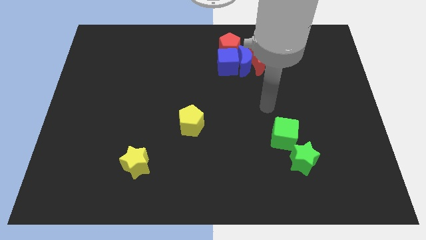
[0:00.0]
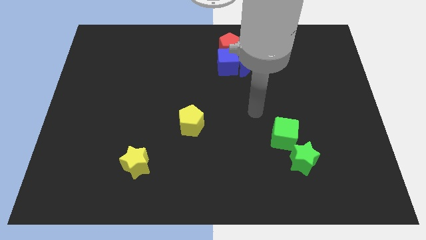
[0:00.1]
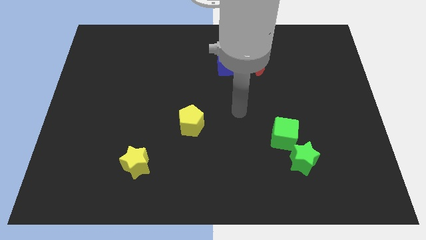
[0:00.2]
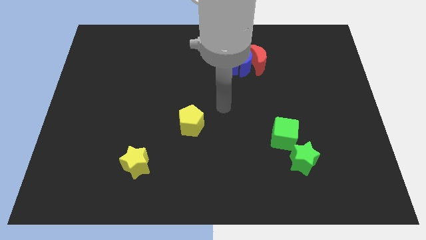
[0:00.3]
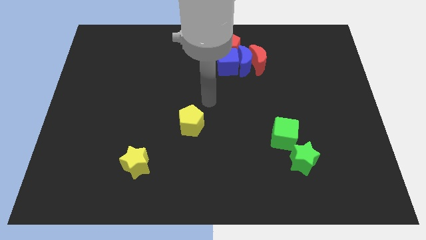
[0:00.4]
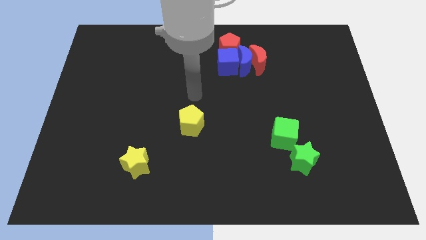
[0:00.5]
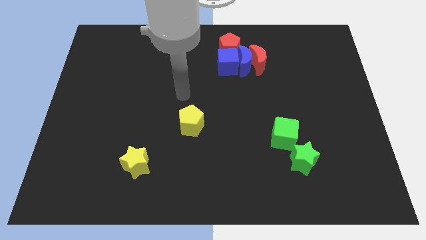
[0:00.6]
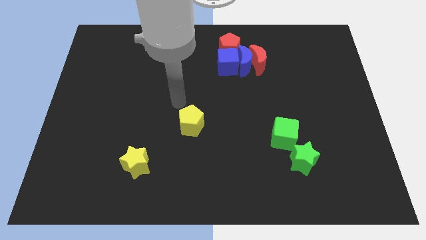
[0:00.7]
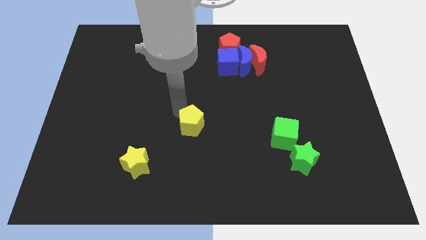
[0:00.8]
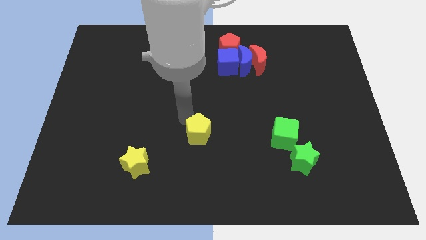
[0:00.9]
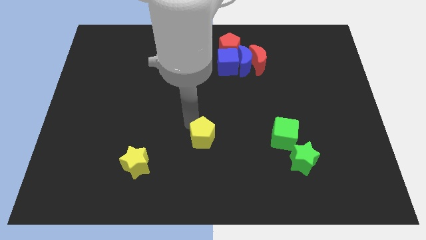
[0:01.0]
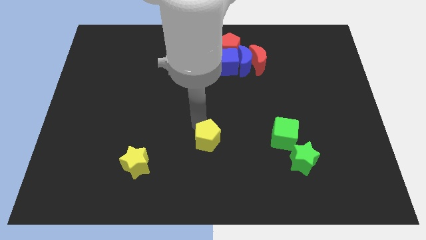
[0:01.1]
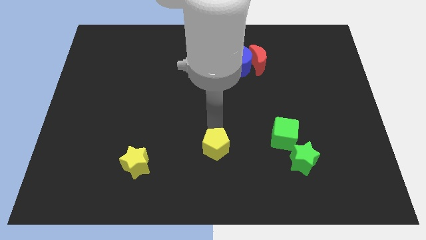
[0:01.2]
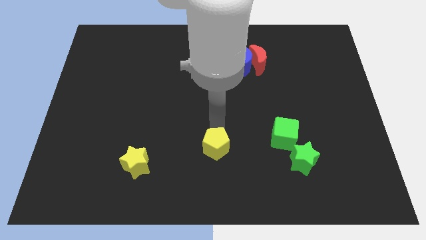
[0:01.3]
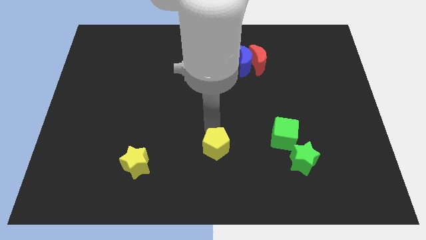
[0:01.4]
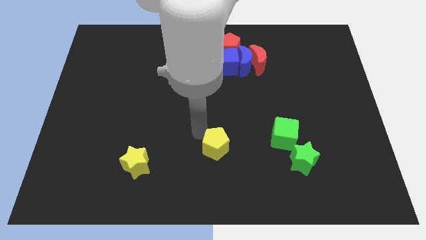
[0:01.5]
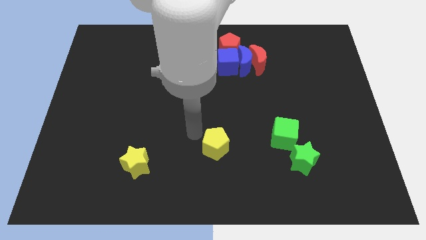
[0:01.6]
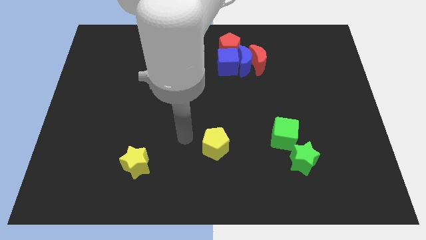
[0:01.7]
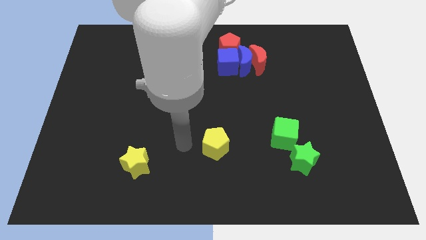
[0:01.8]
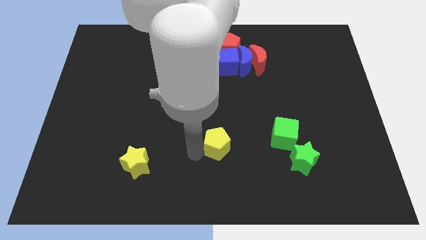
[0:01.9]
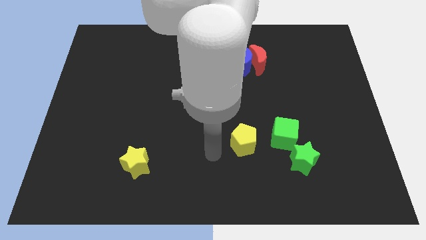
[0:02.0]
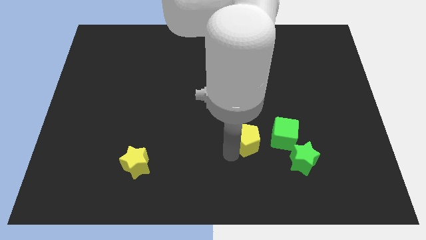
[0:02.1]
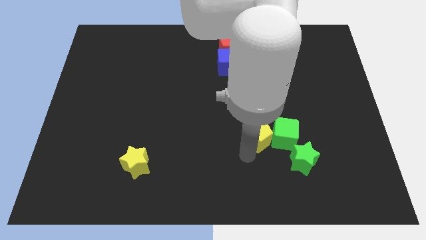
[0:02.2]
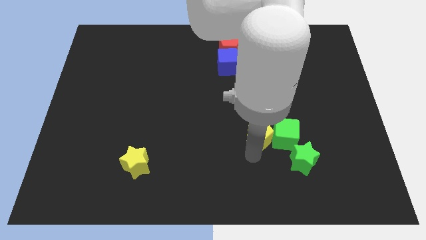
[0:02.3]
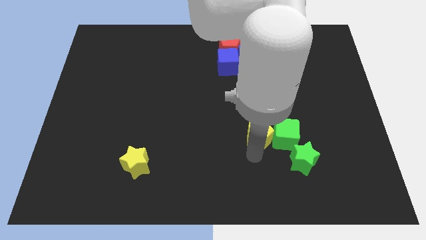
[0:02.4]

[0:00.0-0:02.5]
place the yellow pentagon left to the green cube

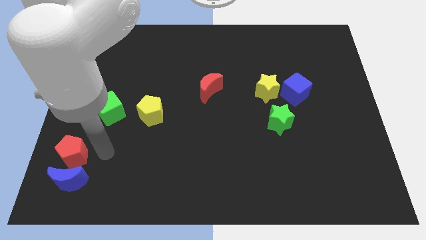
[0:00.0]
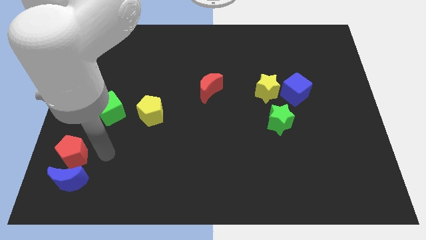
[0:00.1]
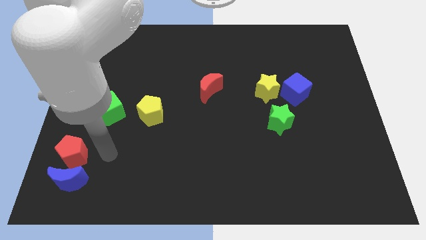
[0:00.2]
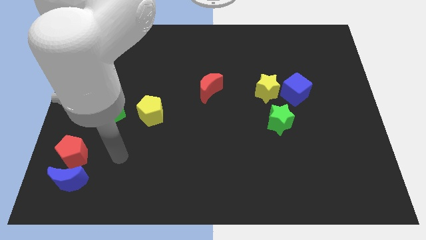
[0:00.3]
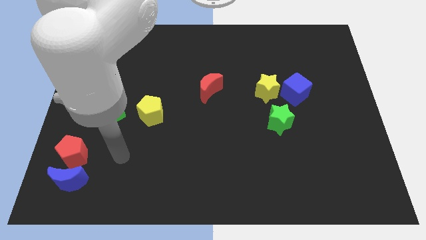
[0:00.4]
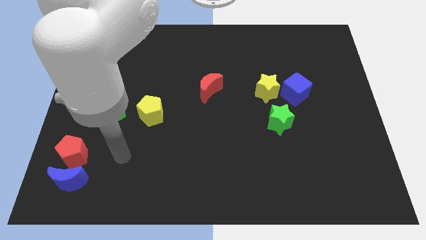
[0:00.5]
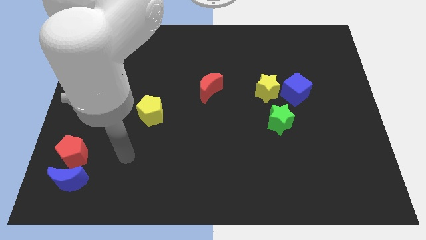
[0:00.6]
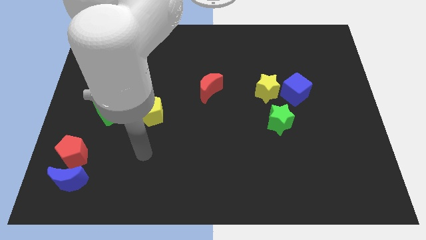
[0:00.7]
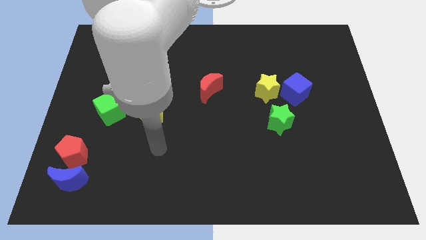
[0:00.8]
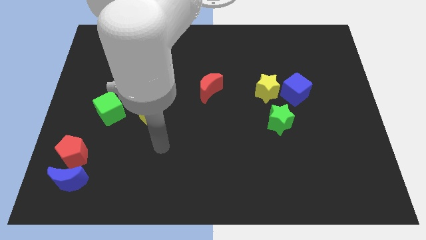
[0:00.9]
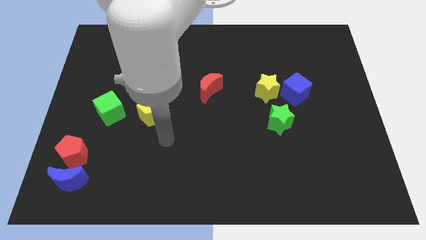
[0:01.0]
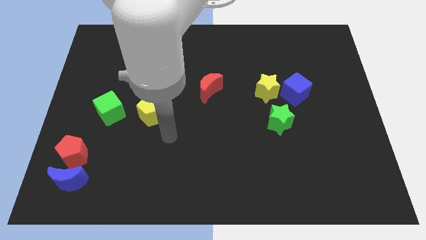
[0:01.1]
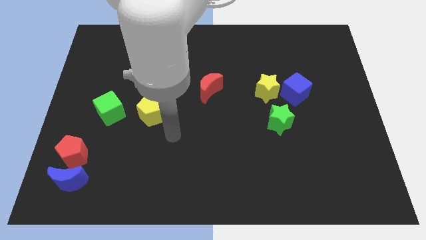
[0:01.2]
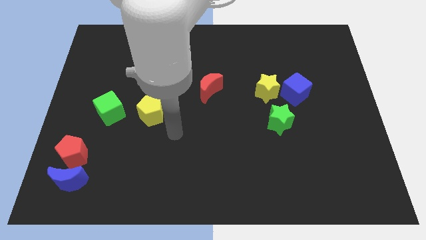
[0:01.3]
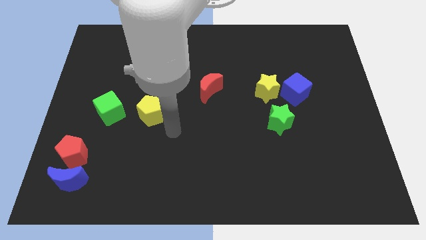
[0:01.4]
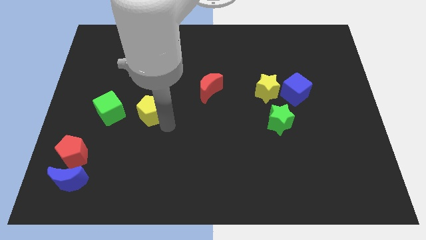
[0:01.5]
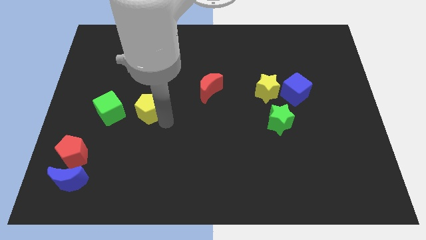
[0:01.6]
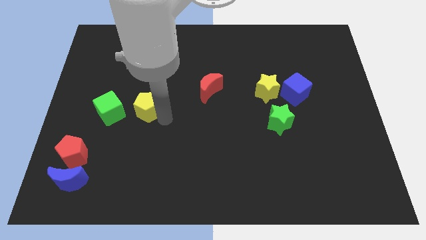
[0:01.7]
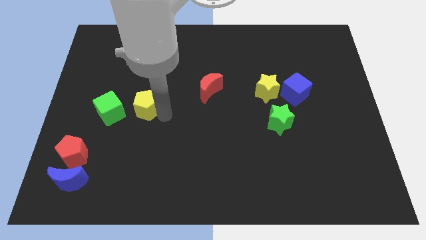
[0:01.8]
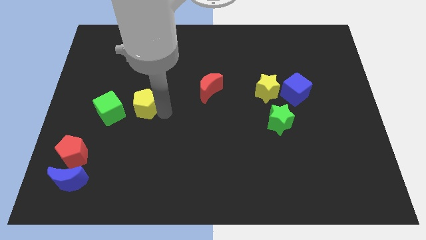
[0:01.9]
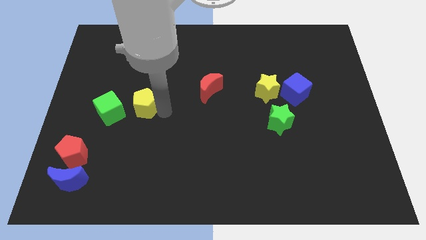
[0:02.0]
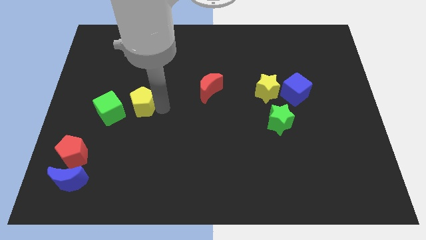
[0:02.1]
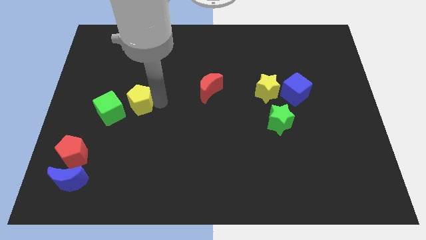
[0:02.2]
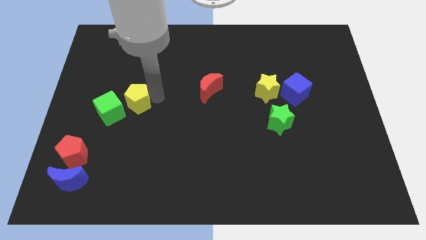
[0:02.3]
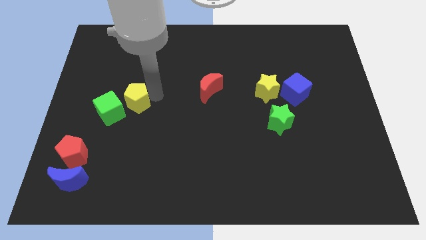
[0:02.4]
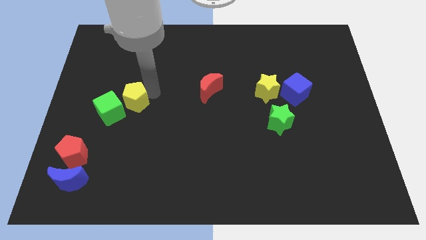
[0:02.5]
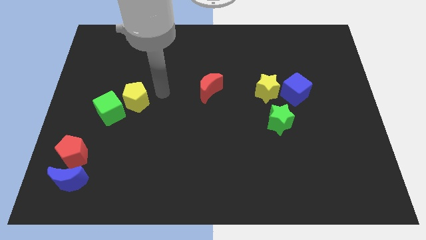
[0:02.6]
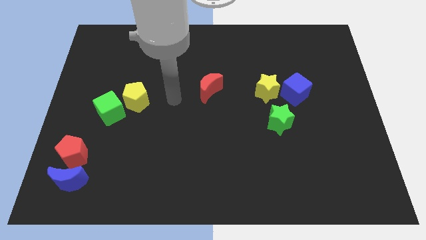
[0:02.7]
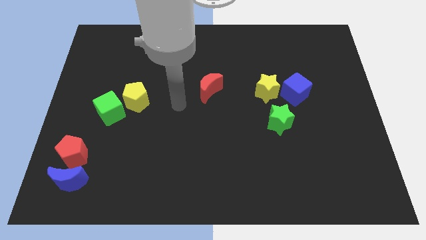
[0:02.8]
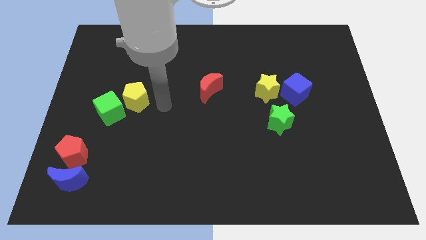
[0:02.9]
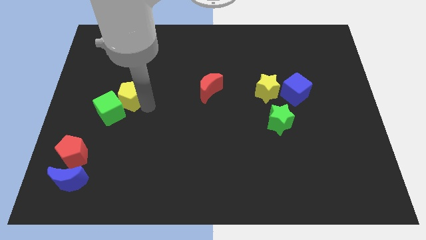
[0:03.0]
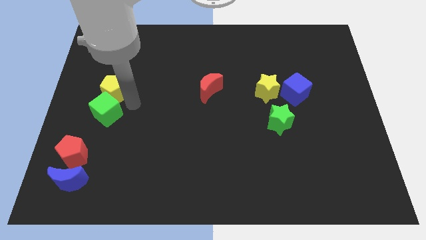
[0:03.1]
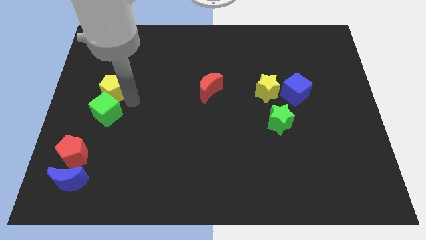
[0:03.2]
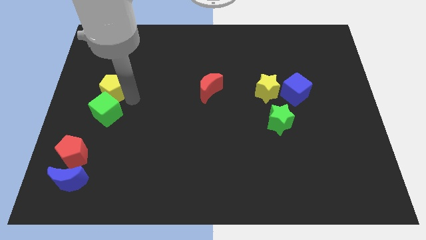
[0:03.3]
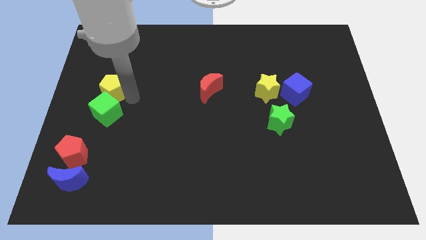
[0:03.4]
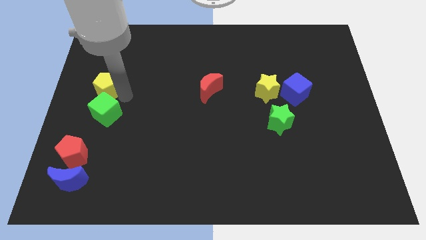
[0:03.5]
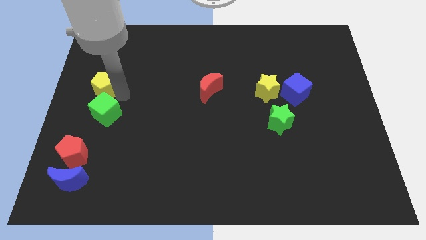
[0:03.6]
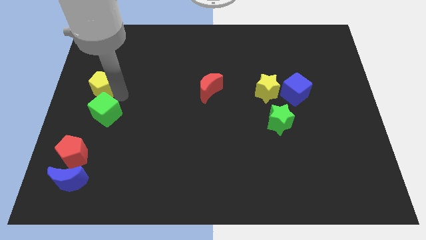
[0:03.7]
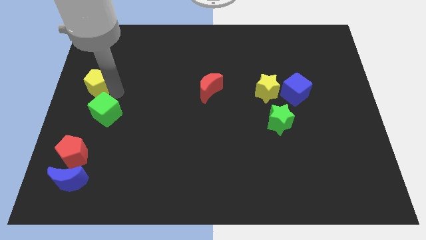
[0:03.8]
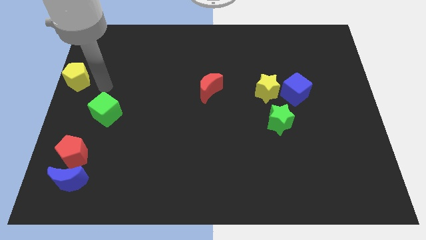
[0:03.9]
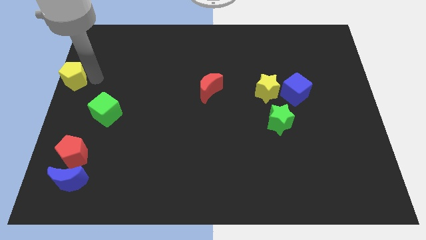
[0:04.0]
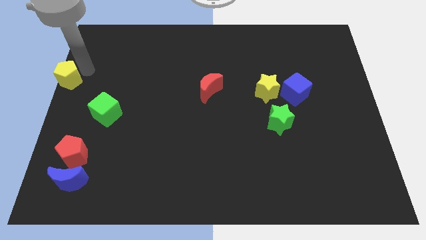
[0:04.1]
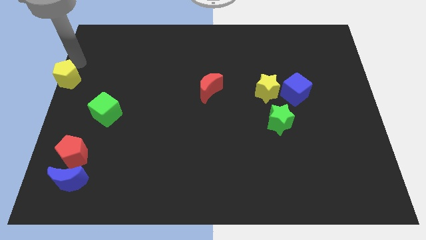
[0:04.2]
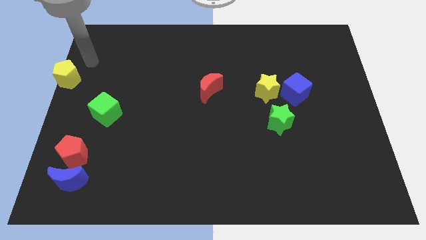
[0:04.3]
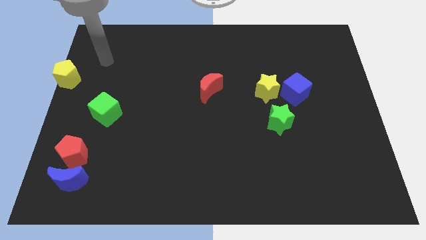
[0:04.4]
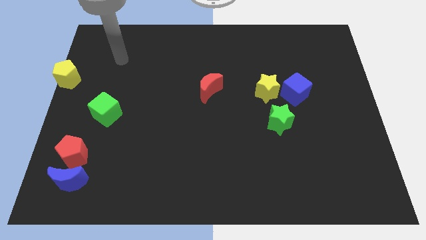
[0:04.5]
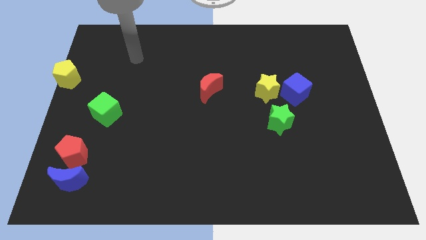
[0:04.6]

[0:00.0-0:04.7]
move the yellow pentagon to the left of the board

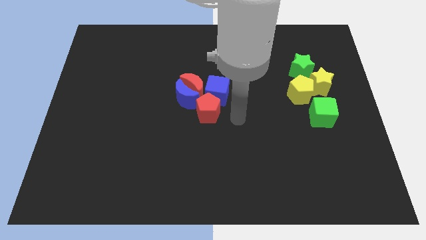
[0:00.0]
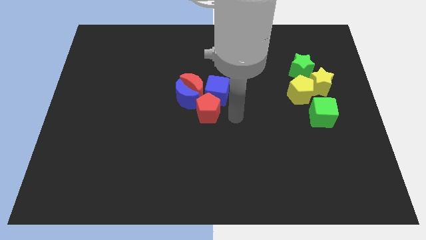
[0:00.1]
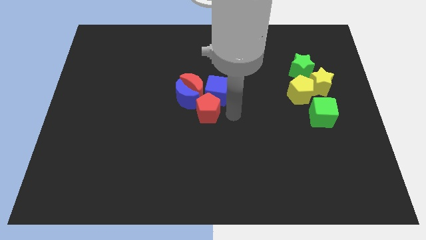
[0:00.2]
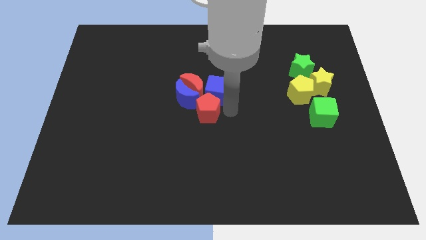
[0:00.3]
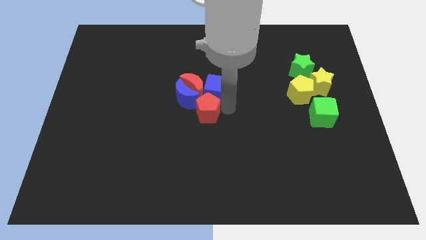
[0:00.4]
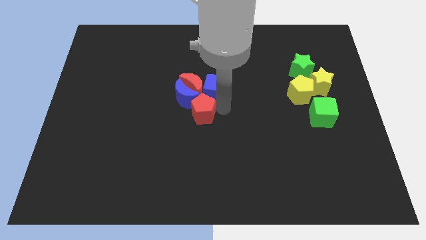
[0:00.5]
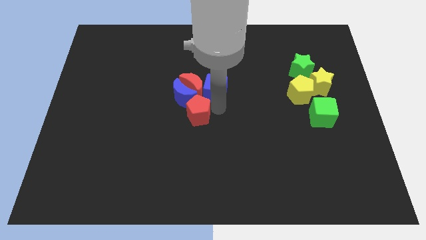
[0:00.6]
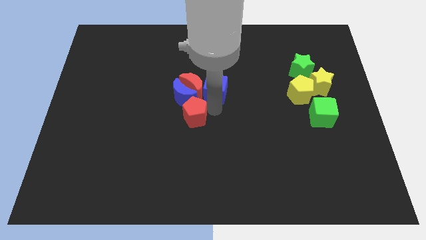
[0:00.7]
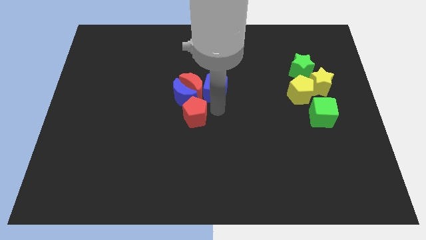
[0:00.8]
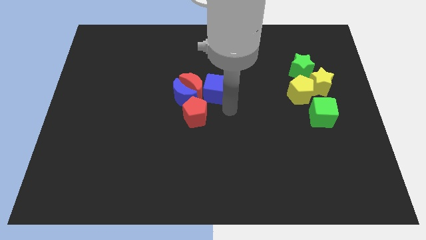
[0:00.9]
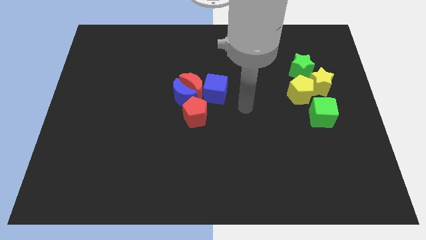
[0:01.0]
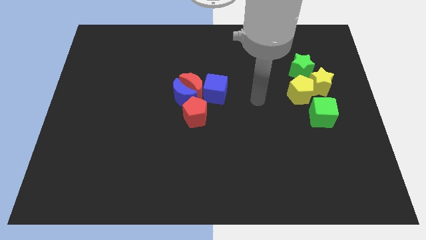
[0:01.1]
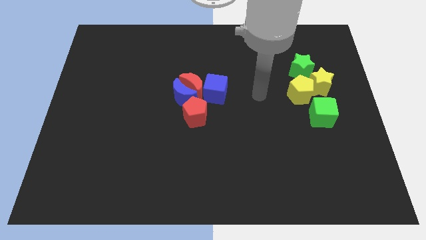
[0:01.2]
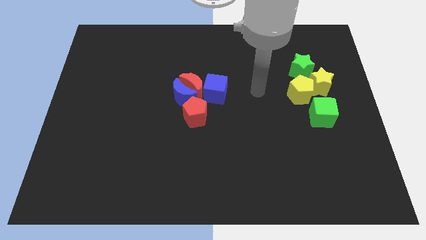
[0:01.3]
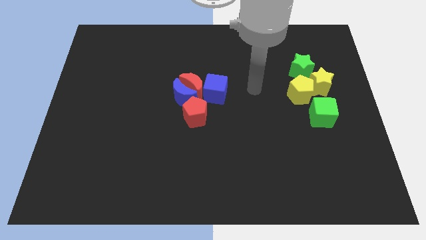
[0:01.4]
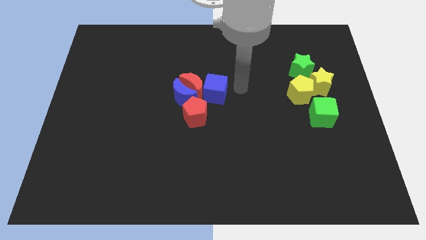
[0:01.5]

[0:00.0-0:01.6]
separate red pentagon and blue cube

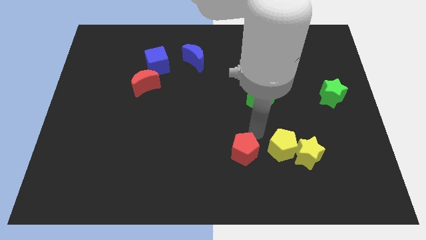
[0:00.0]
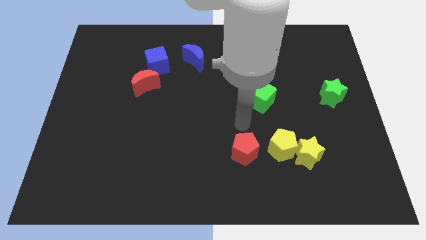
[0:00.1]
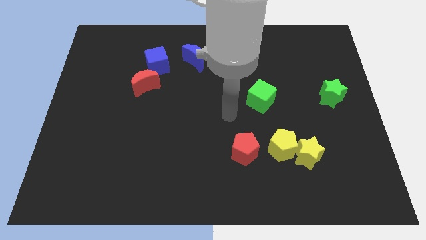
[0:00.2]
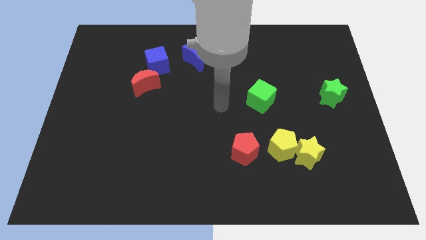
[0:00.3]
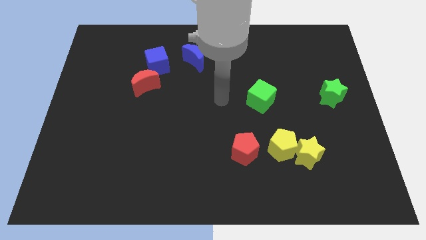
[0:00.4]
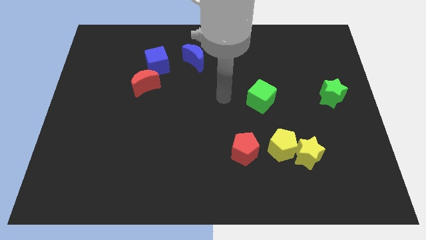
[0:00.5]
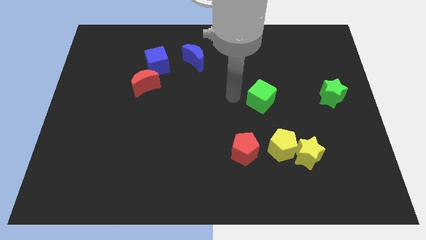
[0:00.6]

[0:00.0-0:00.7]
place your arm towards green cube left side
